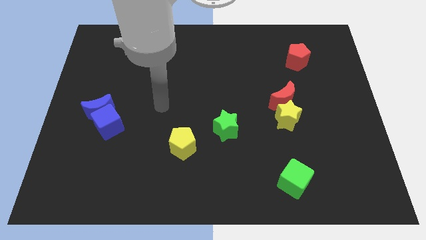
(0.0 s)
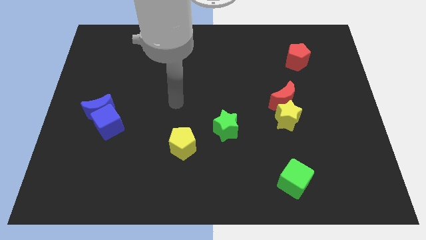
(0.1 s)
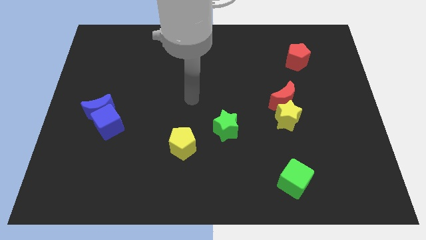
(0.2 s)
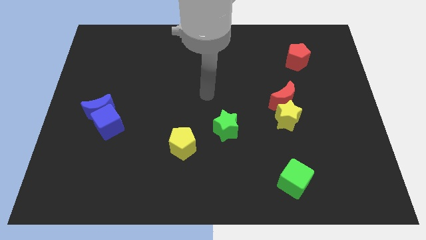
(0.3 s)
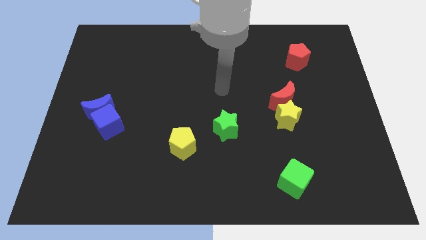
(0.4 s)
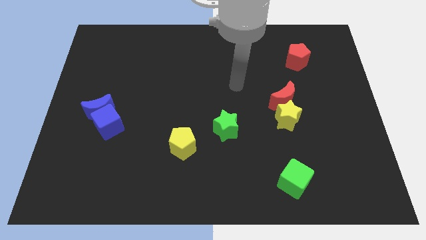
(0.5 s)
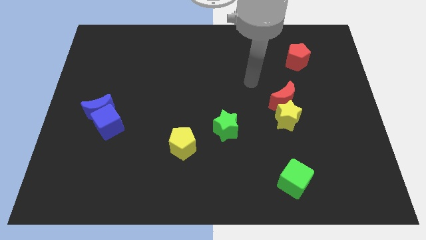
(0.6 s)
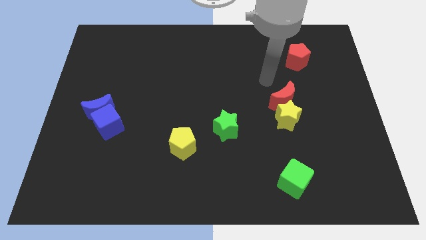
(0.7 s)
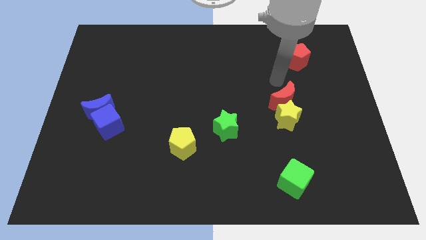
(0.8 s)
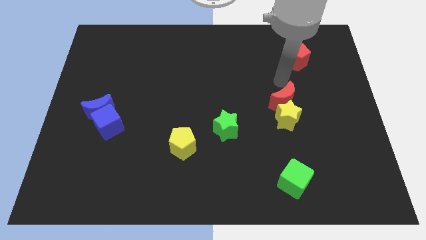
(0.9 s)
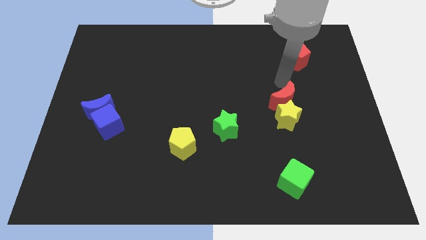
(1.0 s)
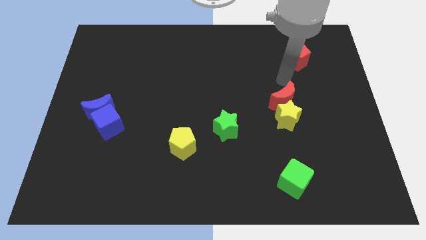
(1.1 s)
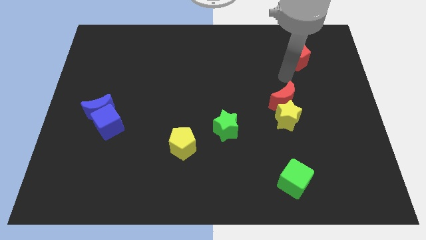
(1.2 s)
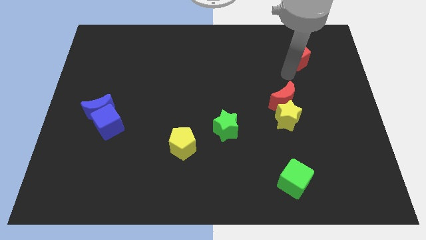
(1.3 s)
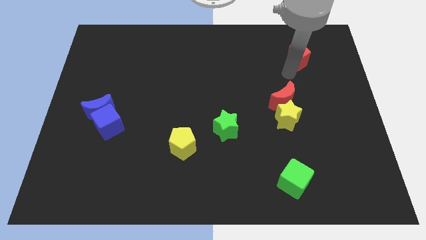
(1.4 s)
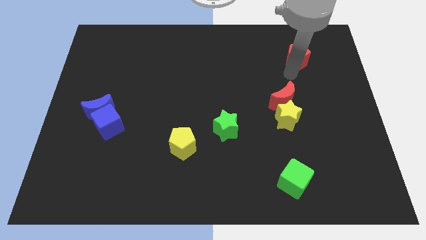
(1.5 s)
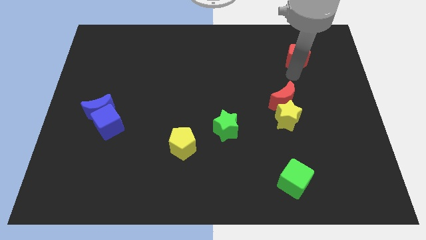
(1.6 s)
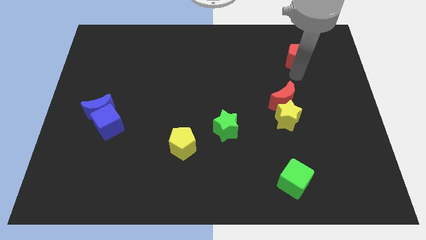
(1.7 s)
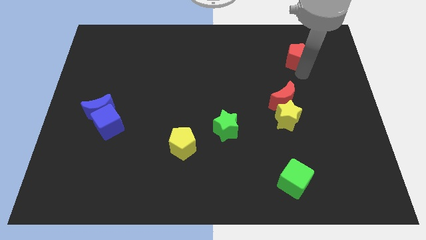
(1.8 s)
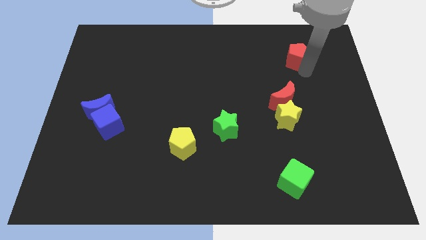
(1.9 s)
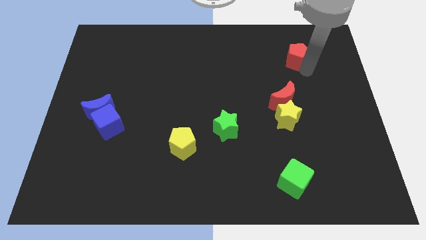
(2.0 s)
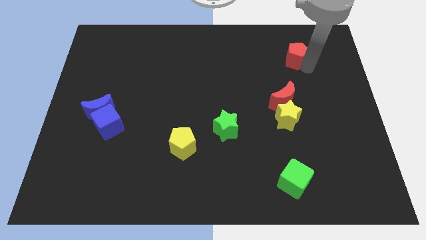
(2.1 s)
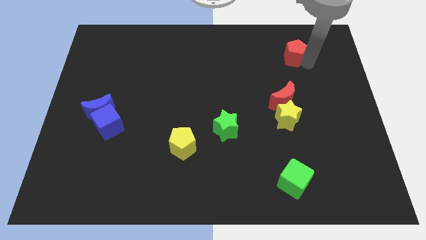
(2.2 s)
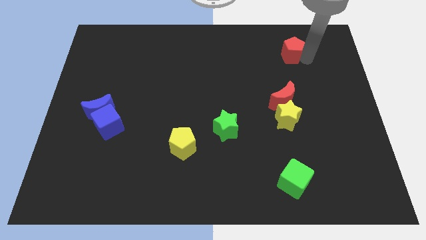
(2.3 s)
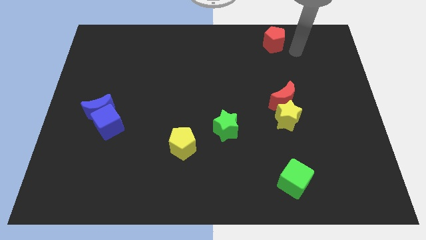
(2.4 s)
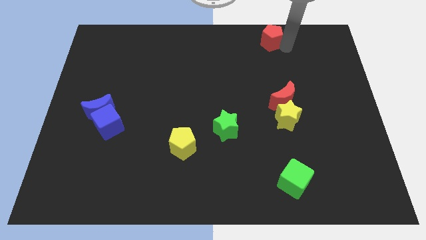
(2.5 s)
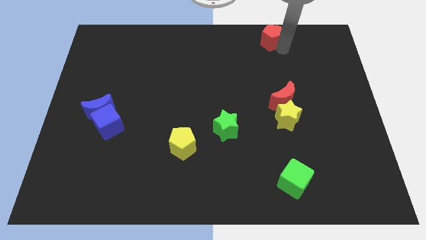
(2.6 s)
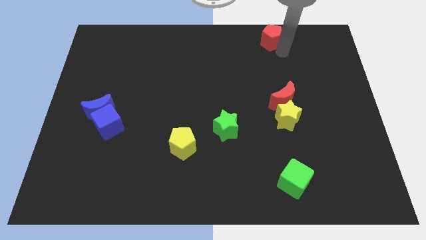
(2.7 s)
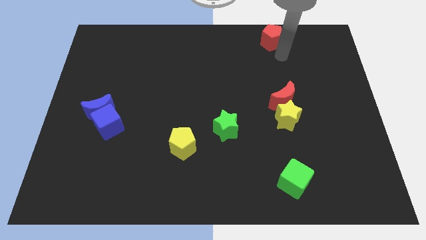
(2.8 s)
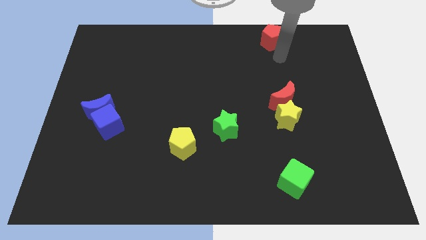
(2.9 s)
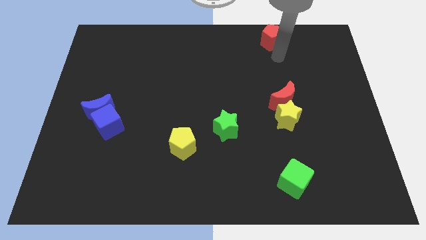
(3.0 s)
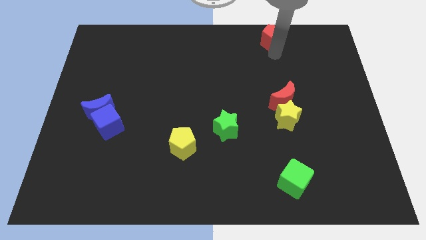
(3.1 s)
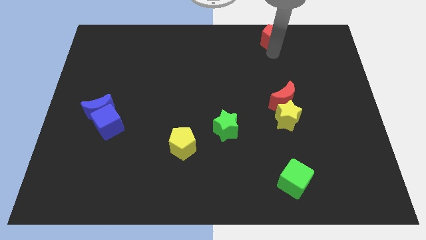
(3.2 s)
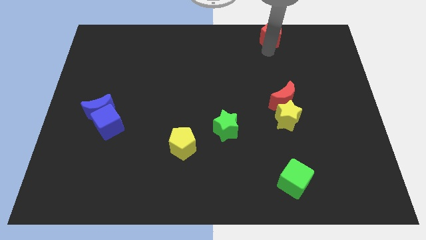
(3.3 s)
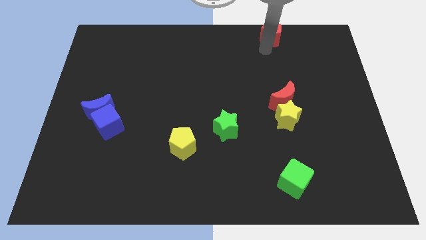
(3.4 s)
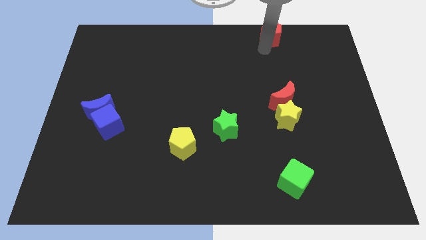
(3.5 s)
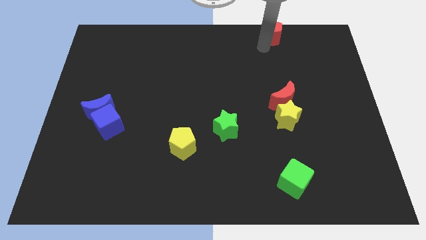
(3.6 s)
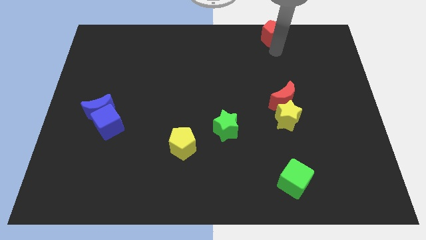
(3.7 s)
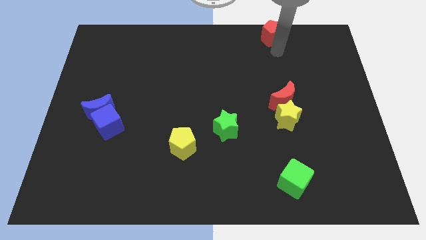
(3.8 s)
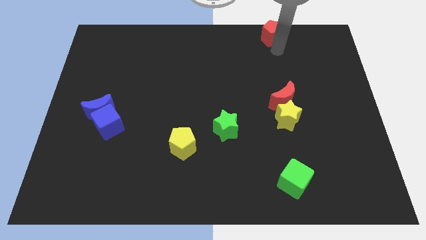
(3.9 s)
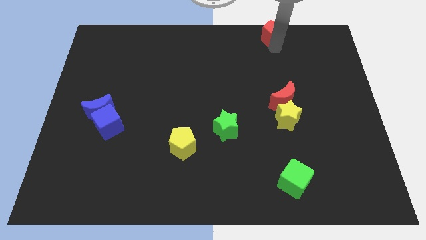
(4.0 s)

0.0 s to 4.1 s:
push red pentagon to the top

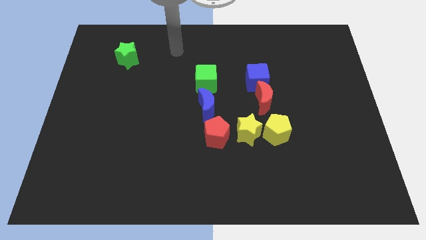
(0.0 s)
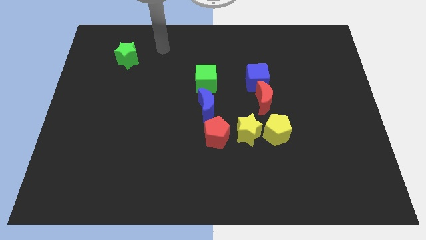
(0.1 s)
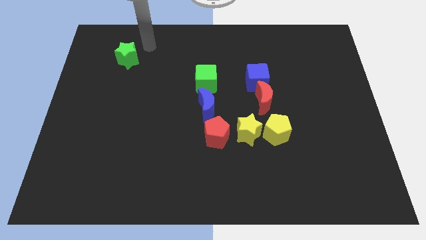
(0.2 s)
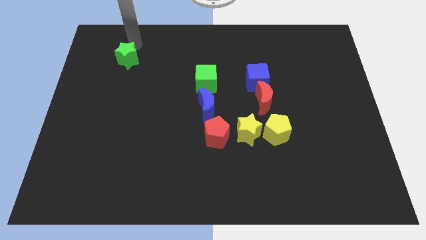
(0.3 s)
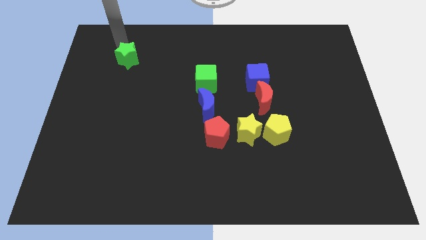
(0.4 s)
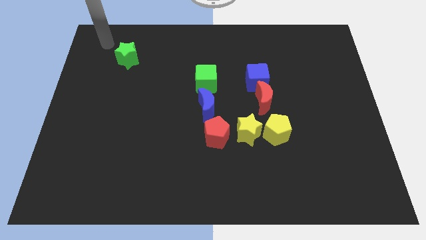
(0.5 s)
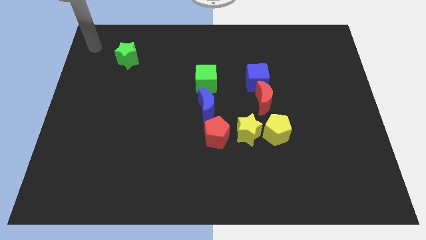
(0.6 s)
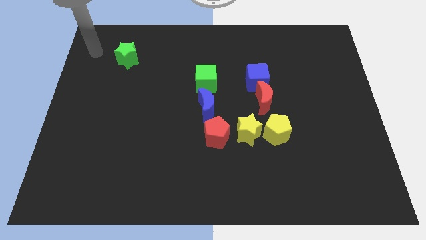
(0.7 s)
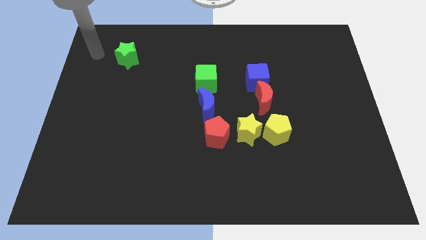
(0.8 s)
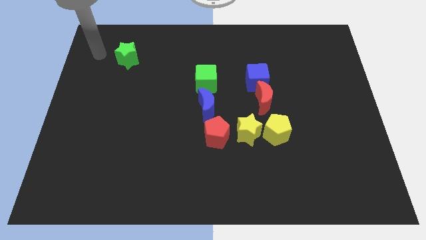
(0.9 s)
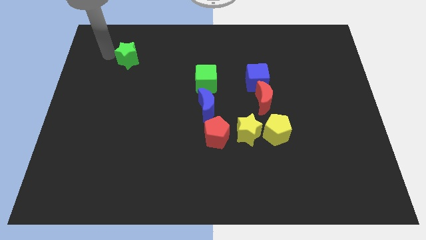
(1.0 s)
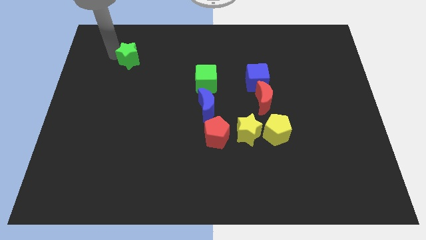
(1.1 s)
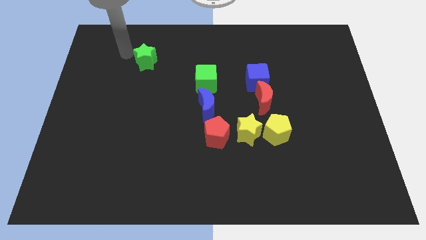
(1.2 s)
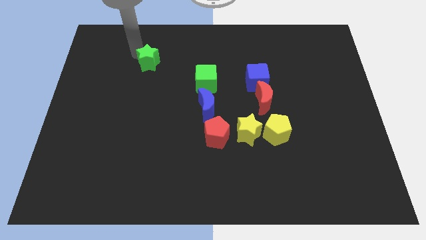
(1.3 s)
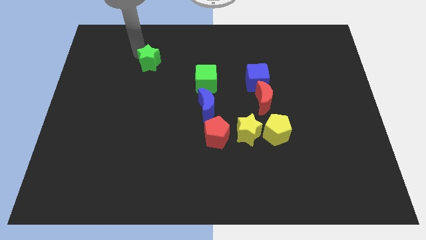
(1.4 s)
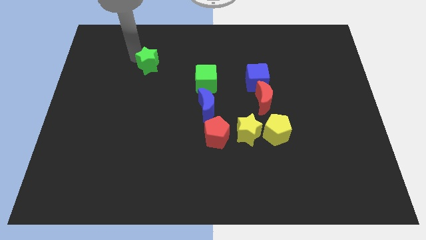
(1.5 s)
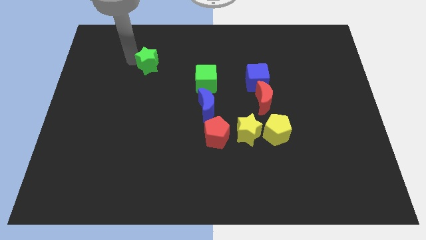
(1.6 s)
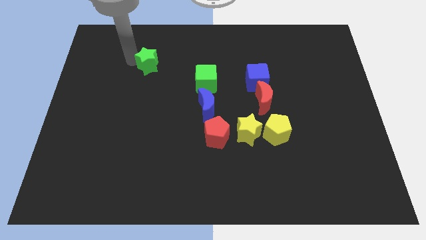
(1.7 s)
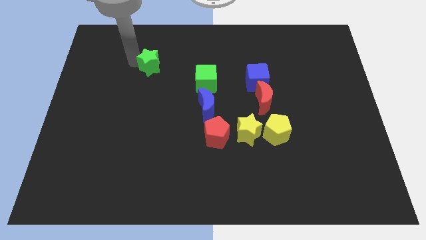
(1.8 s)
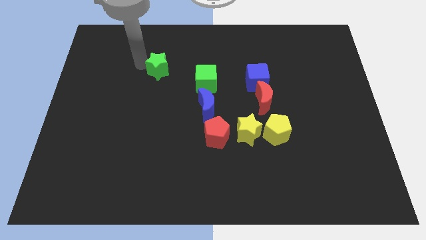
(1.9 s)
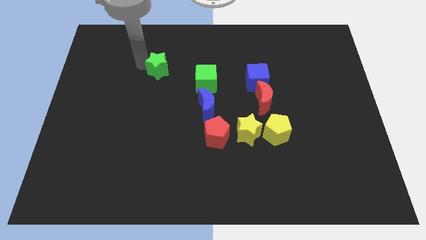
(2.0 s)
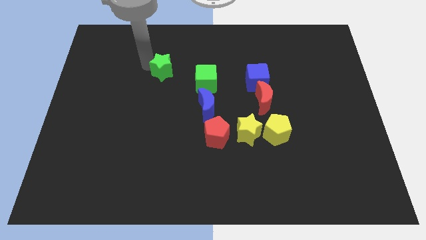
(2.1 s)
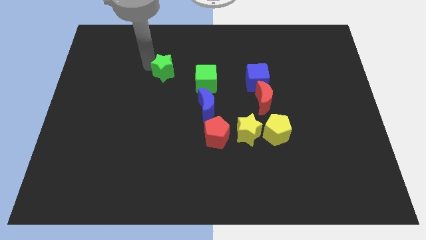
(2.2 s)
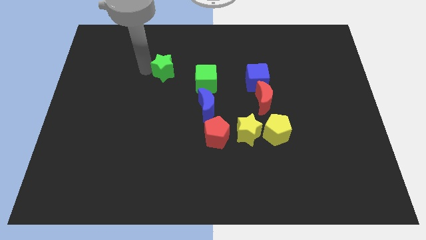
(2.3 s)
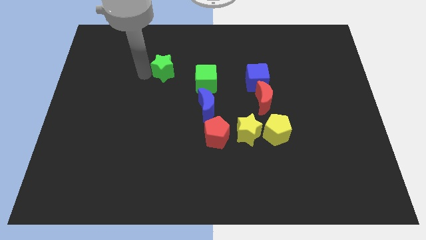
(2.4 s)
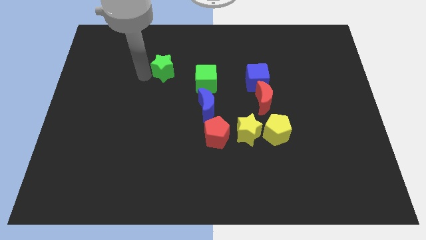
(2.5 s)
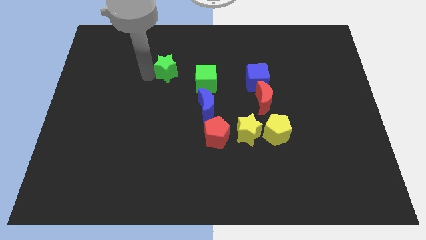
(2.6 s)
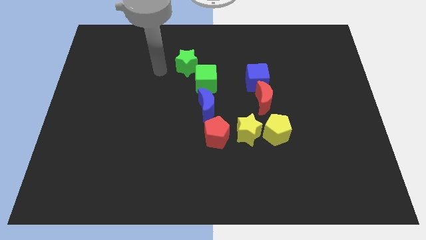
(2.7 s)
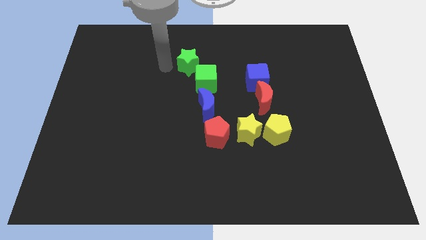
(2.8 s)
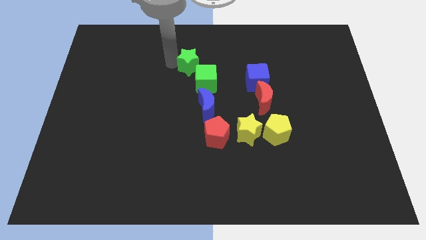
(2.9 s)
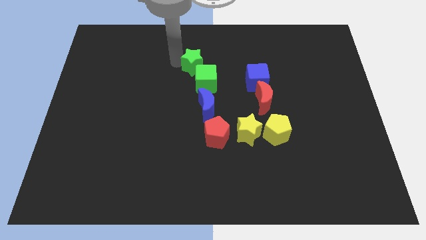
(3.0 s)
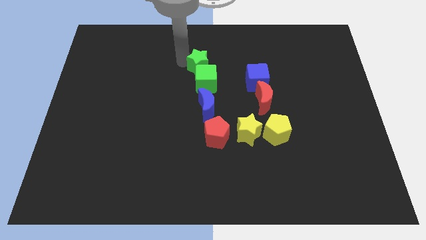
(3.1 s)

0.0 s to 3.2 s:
move the green star to the top left side of the green cube

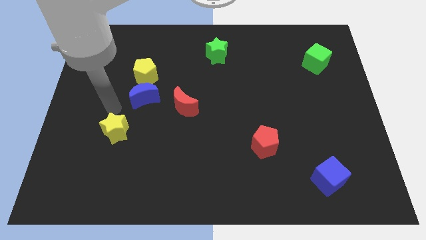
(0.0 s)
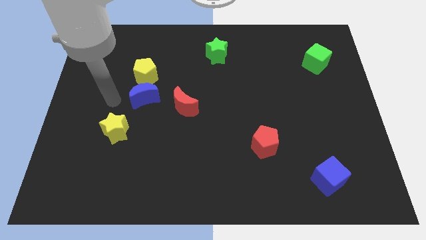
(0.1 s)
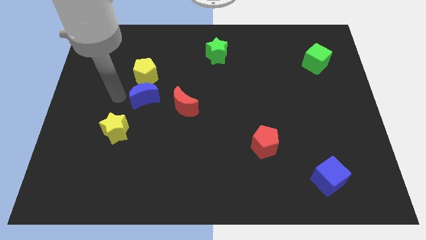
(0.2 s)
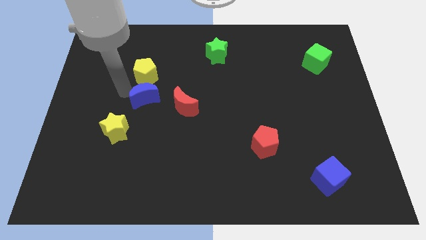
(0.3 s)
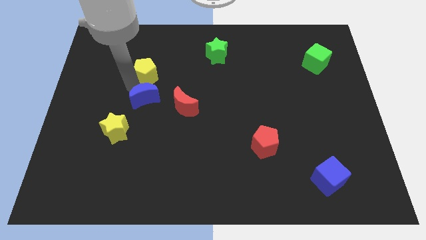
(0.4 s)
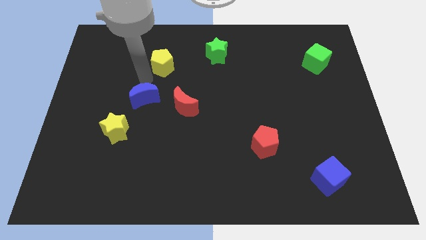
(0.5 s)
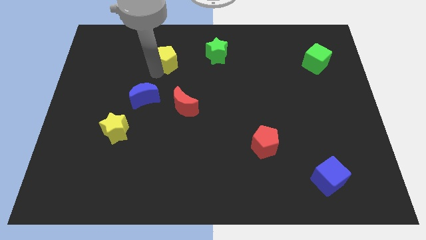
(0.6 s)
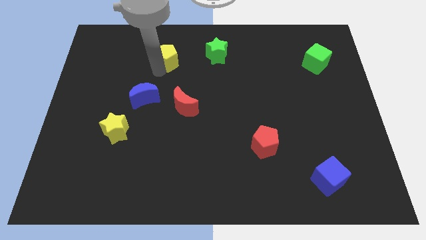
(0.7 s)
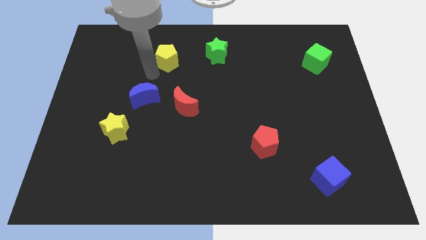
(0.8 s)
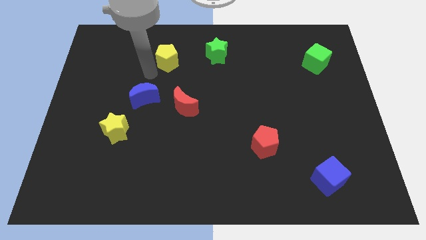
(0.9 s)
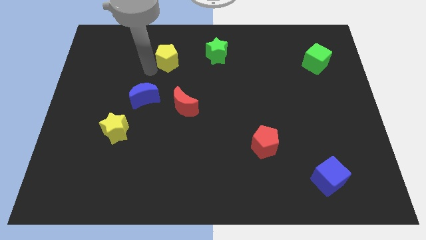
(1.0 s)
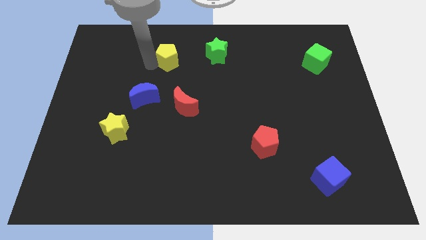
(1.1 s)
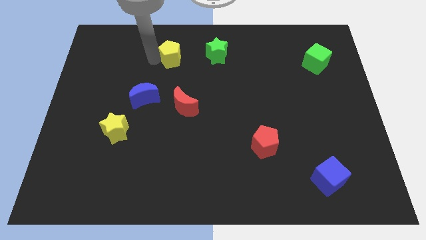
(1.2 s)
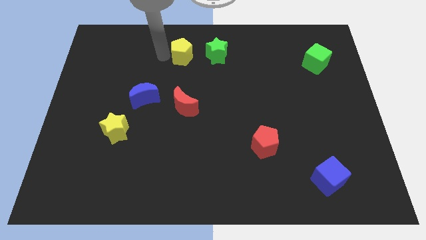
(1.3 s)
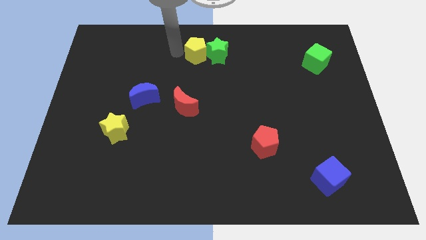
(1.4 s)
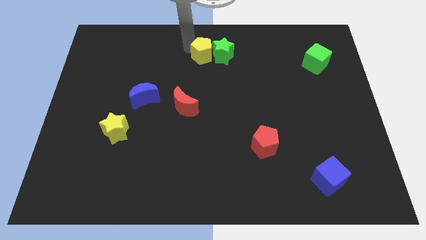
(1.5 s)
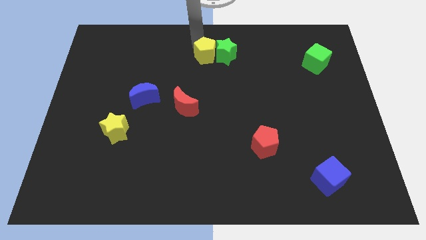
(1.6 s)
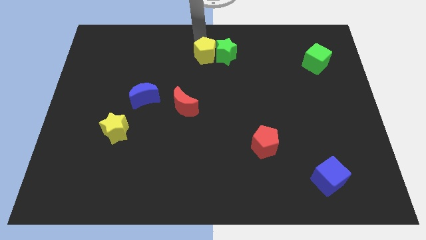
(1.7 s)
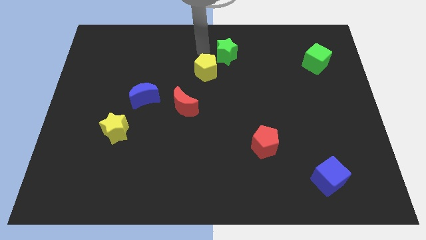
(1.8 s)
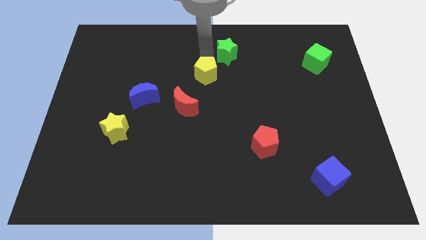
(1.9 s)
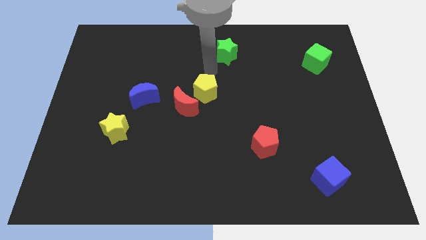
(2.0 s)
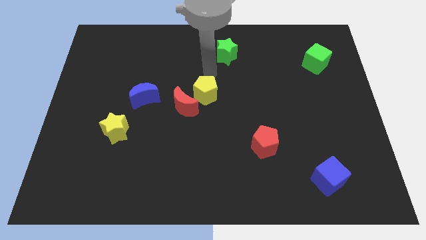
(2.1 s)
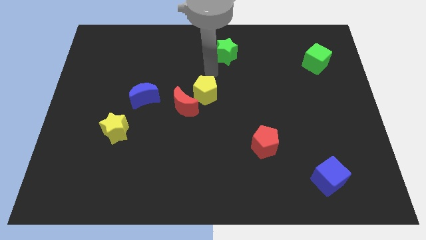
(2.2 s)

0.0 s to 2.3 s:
move the yellow pentagon above the red moon diagonally
